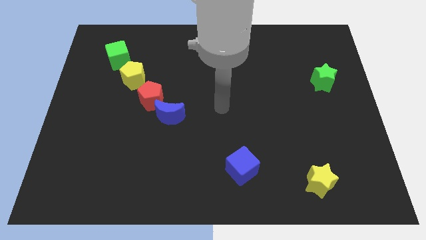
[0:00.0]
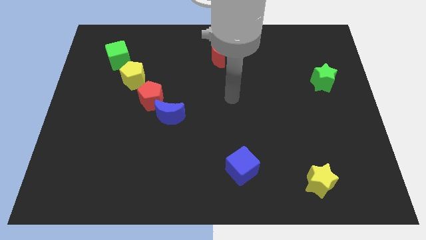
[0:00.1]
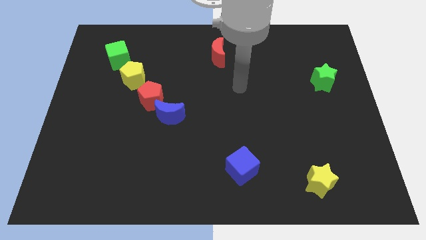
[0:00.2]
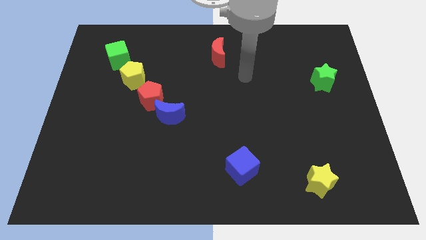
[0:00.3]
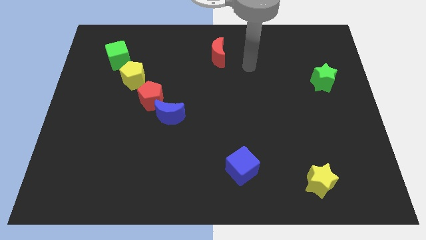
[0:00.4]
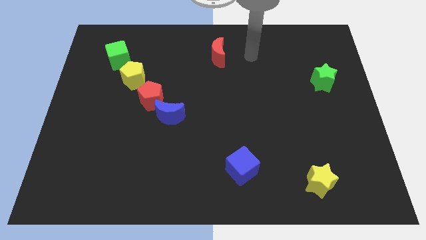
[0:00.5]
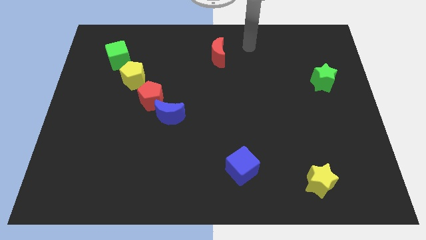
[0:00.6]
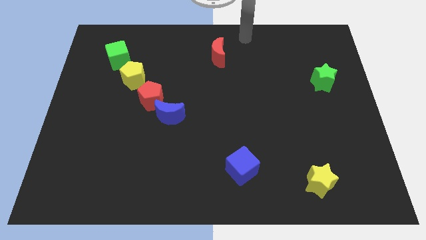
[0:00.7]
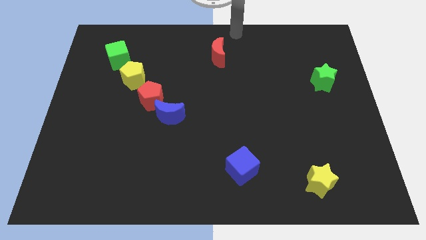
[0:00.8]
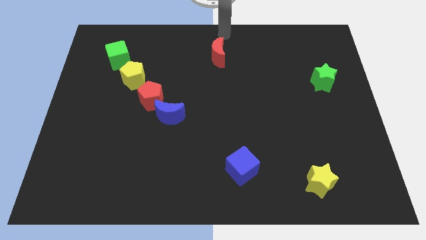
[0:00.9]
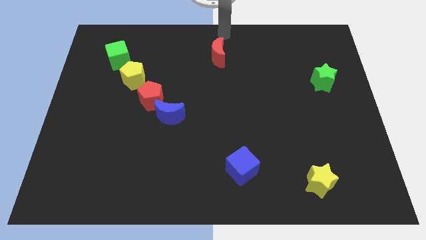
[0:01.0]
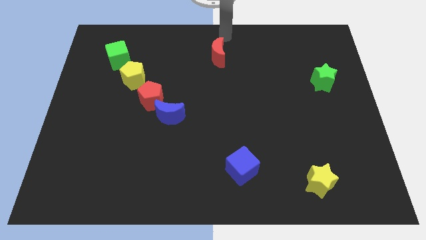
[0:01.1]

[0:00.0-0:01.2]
move your arm near red moon

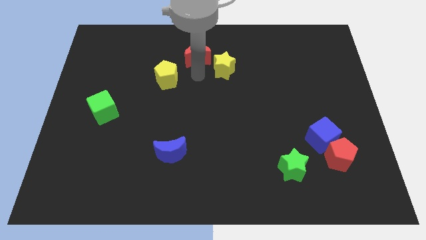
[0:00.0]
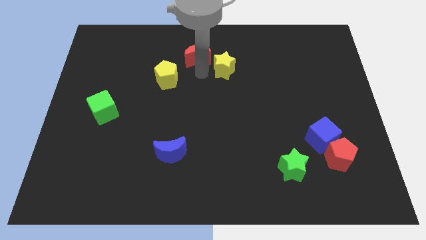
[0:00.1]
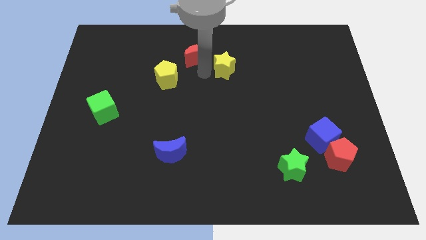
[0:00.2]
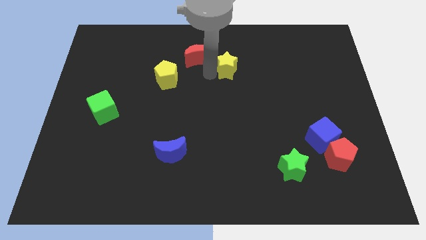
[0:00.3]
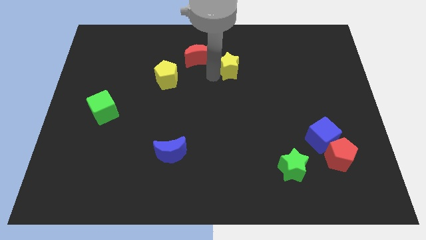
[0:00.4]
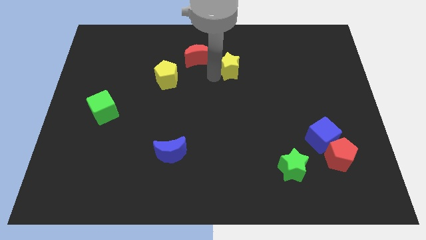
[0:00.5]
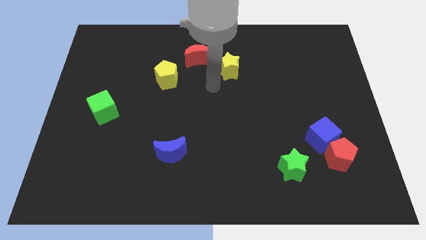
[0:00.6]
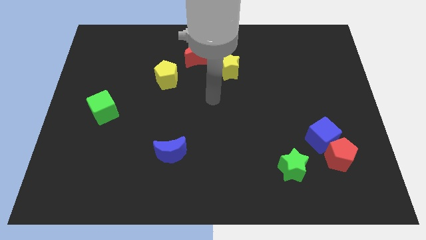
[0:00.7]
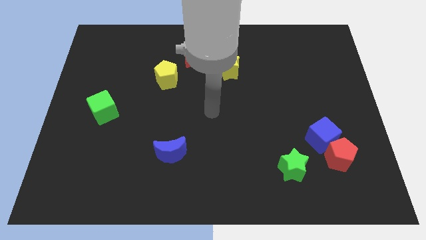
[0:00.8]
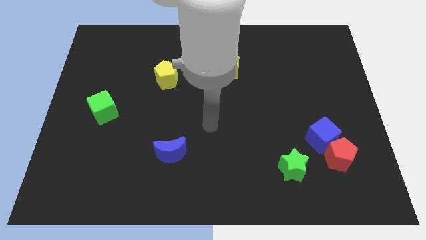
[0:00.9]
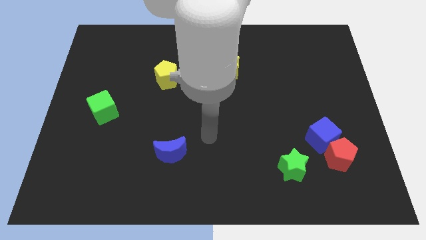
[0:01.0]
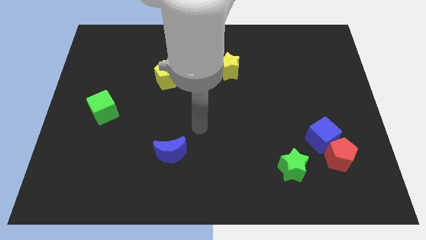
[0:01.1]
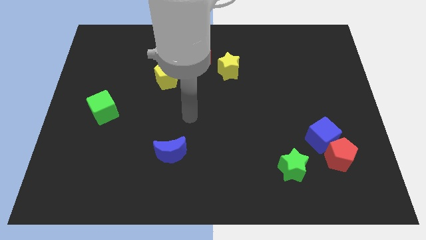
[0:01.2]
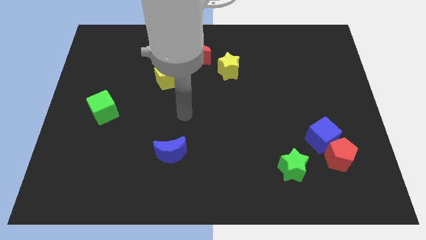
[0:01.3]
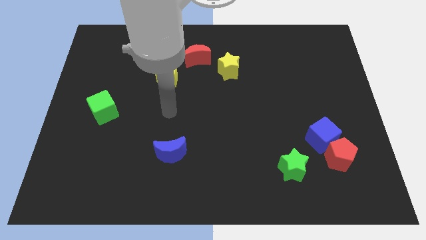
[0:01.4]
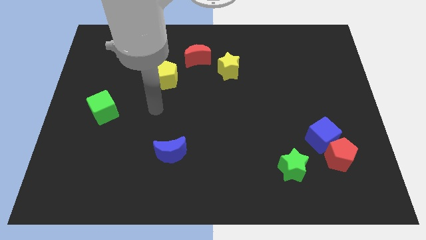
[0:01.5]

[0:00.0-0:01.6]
push the yellow star slightly to the right

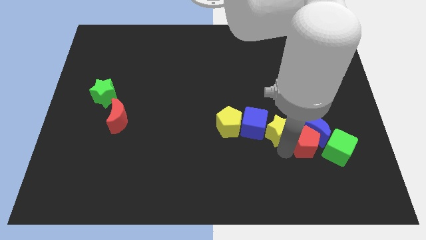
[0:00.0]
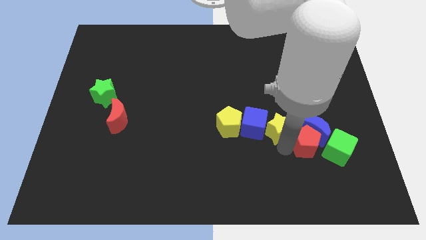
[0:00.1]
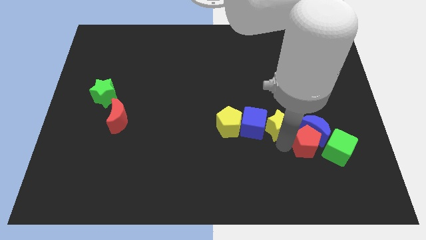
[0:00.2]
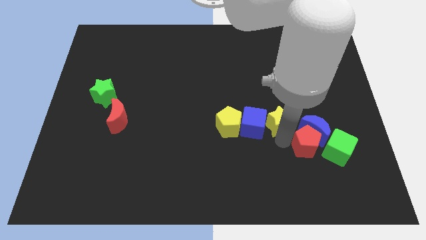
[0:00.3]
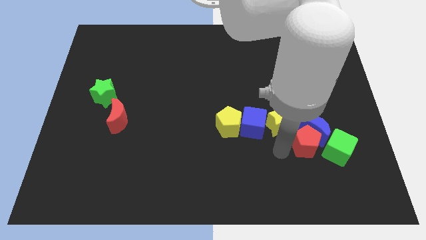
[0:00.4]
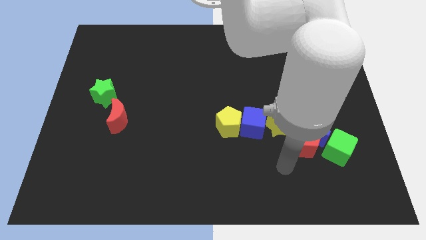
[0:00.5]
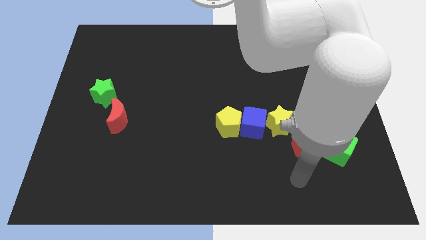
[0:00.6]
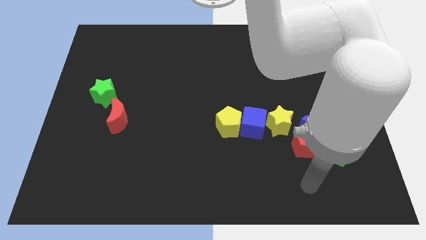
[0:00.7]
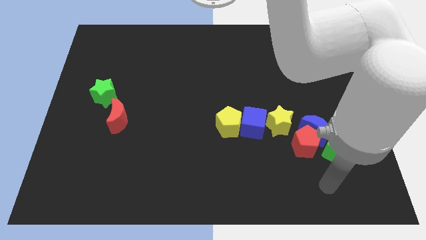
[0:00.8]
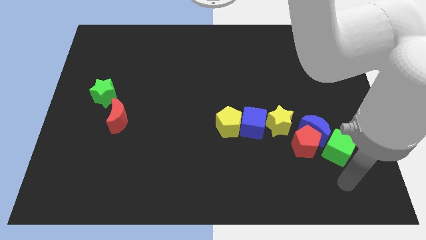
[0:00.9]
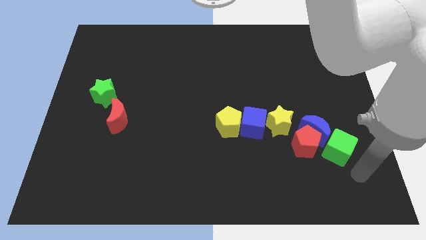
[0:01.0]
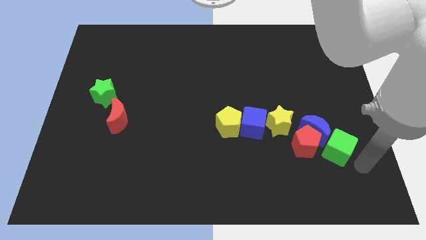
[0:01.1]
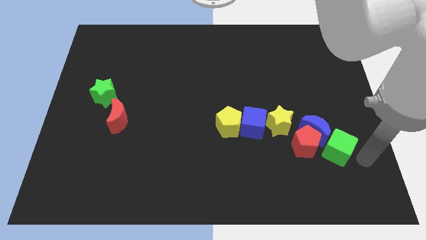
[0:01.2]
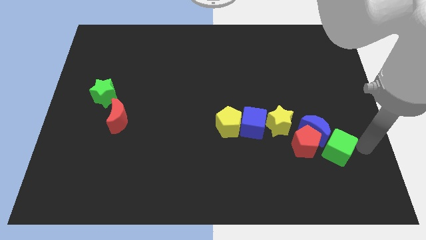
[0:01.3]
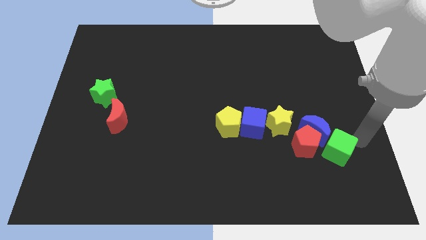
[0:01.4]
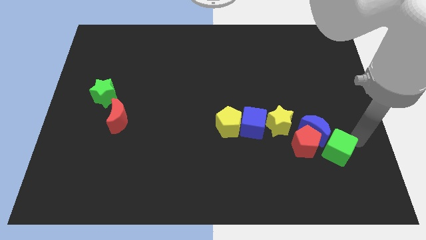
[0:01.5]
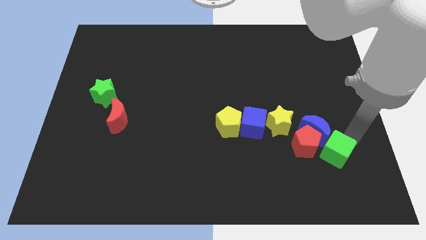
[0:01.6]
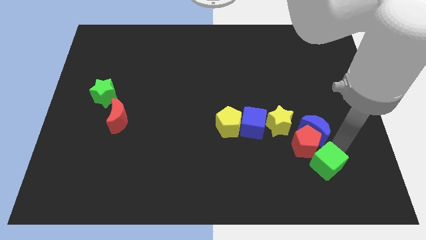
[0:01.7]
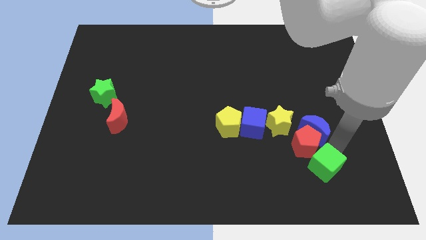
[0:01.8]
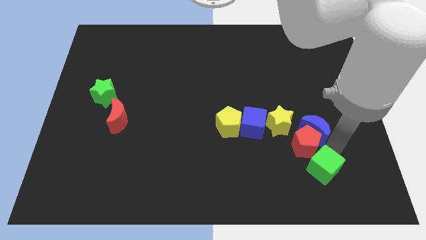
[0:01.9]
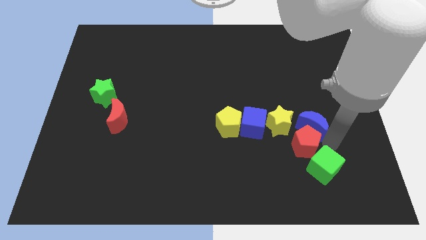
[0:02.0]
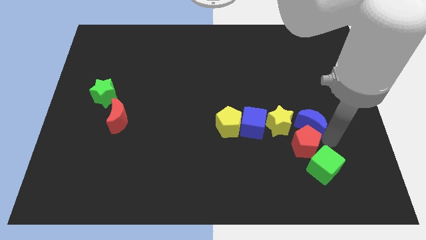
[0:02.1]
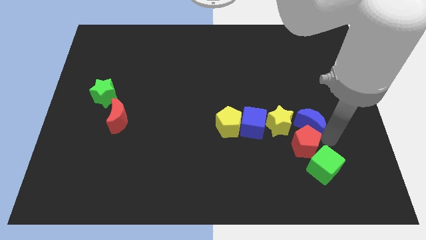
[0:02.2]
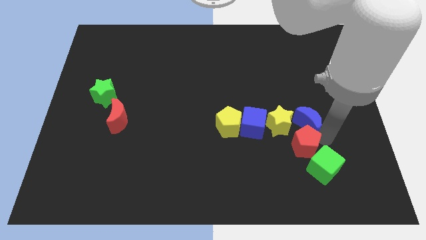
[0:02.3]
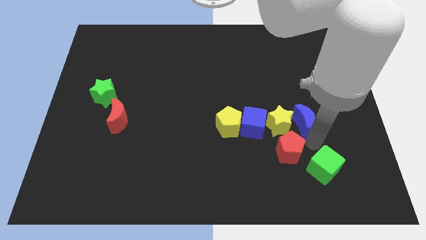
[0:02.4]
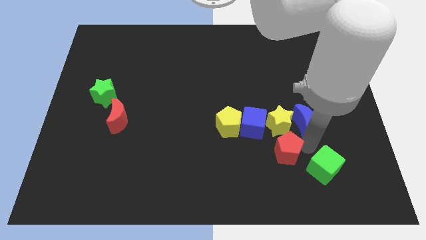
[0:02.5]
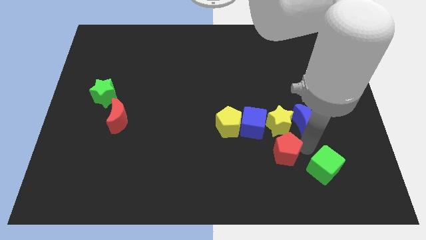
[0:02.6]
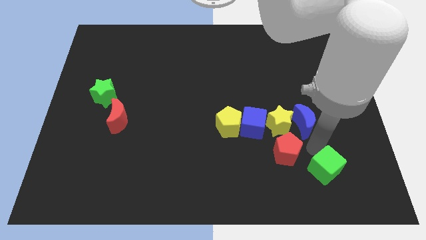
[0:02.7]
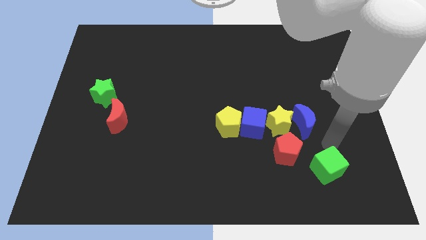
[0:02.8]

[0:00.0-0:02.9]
place red pentagon below yellow star

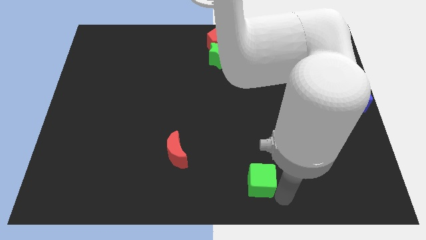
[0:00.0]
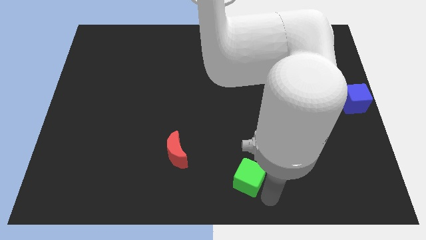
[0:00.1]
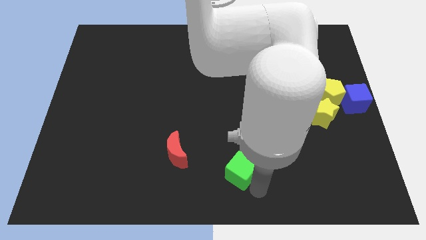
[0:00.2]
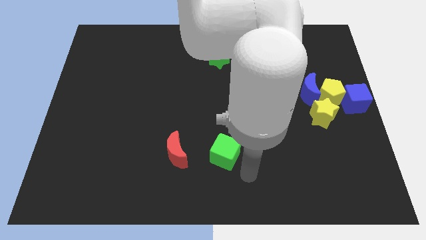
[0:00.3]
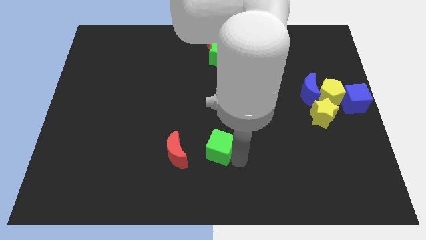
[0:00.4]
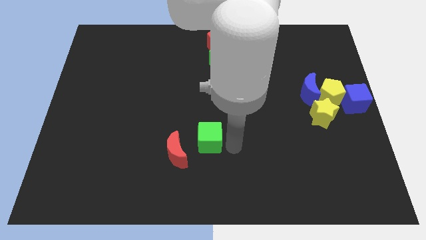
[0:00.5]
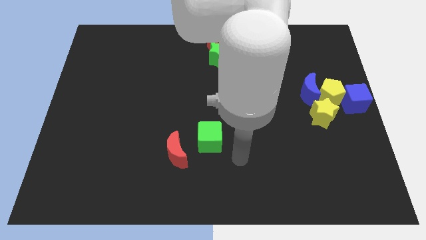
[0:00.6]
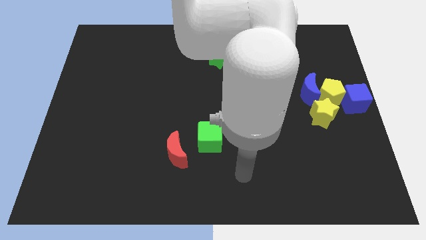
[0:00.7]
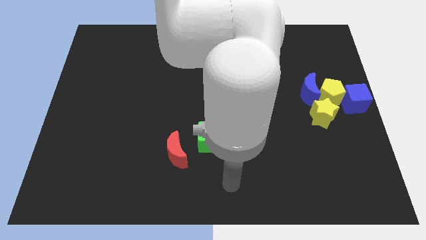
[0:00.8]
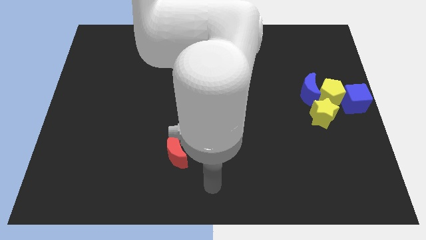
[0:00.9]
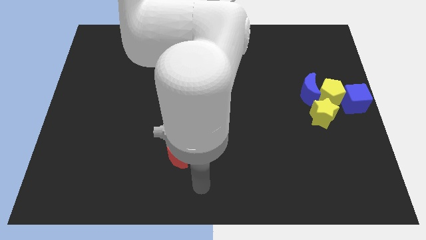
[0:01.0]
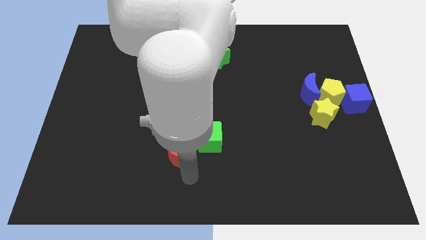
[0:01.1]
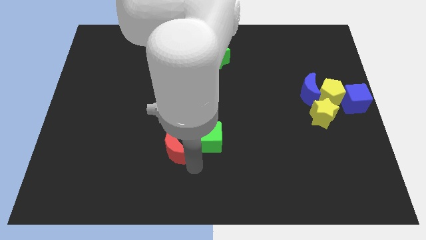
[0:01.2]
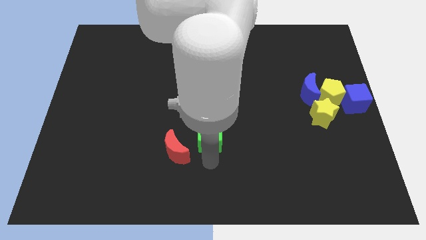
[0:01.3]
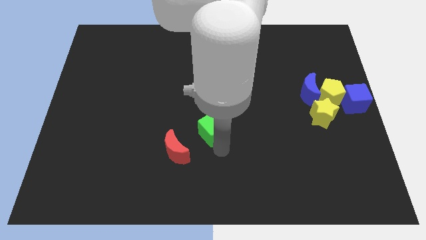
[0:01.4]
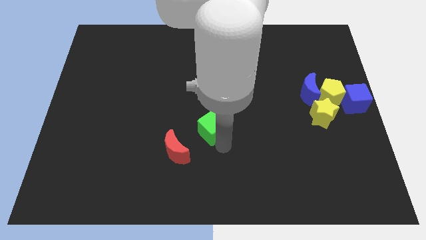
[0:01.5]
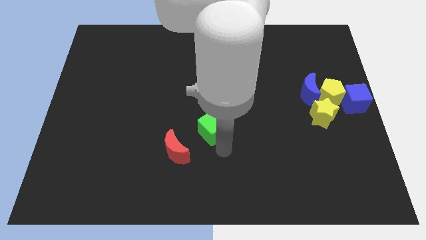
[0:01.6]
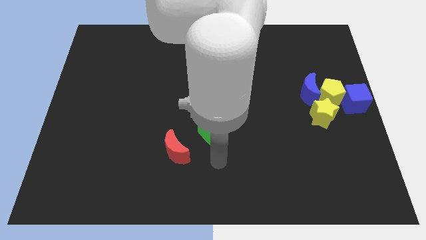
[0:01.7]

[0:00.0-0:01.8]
move the green cube slightly towards up

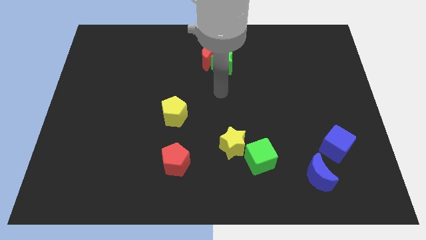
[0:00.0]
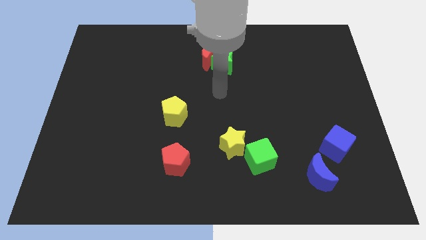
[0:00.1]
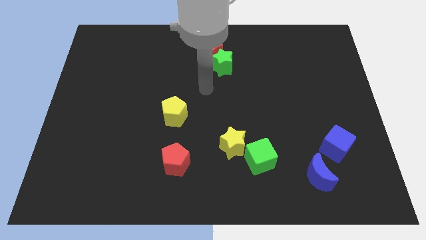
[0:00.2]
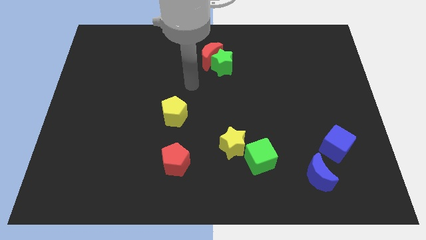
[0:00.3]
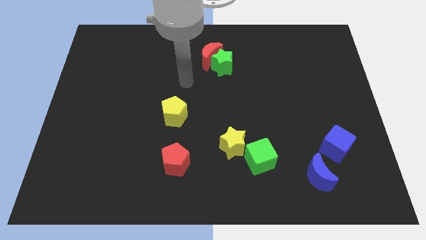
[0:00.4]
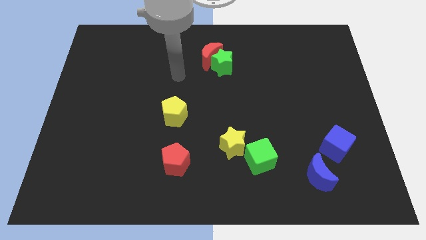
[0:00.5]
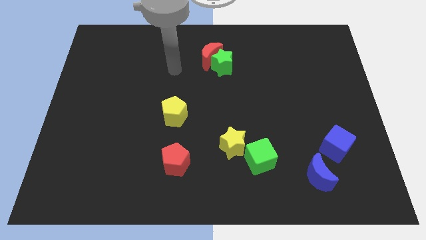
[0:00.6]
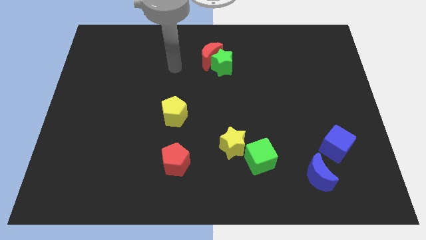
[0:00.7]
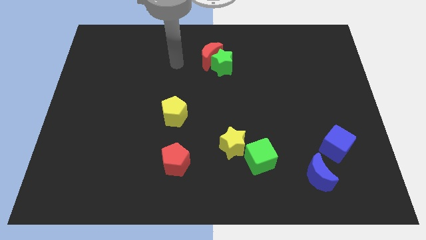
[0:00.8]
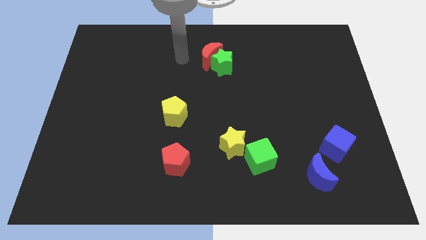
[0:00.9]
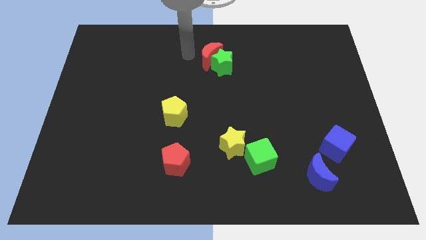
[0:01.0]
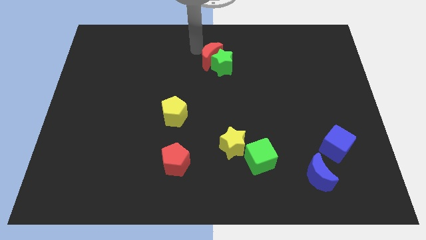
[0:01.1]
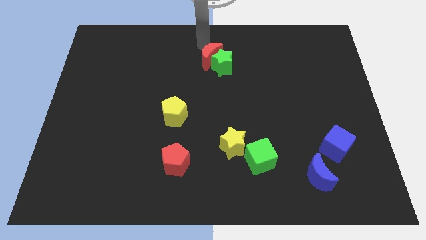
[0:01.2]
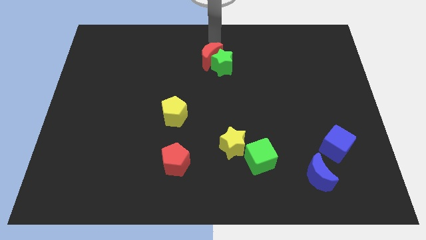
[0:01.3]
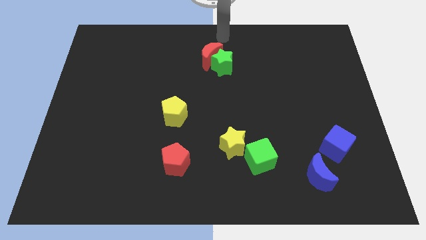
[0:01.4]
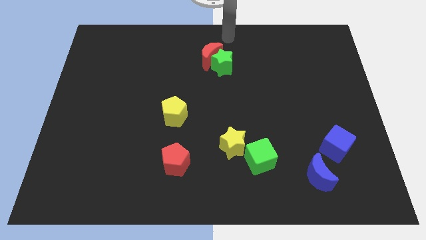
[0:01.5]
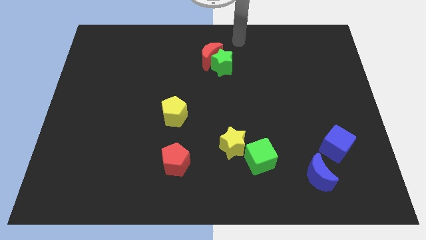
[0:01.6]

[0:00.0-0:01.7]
move your hand to the top center
